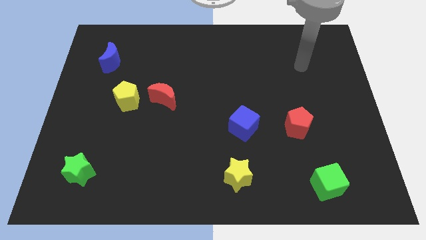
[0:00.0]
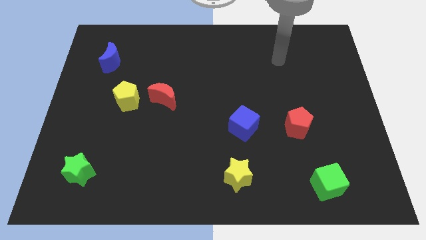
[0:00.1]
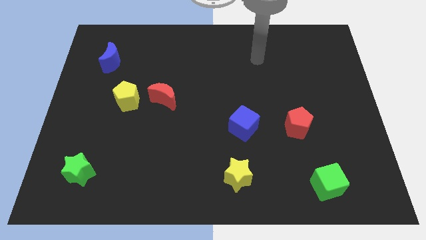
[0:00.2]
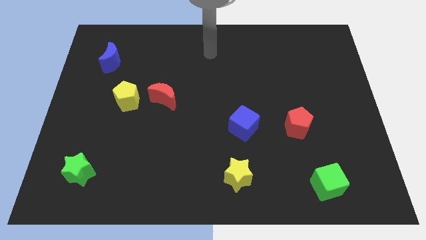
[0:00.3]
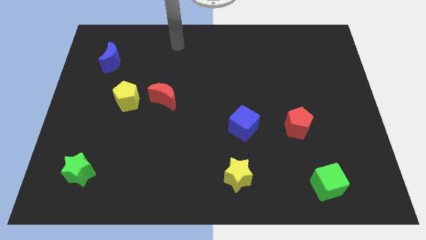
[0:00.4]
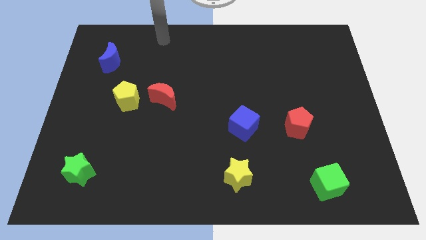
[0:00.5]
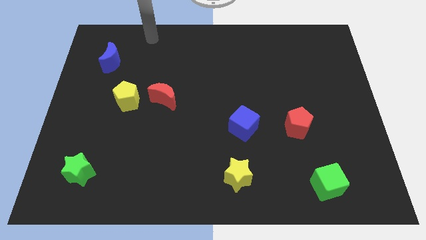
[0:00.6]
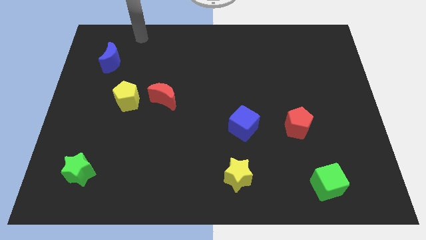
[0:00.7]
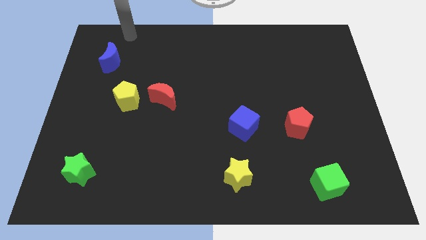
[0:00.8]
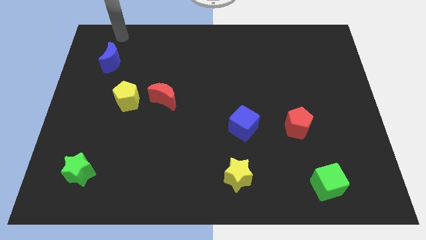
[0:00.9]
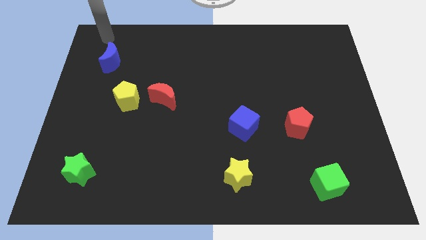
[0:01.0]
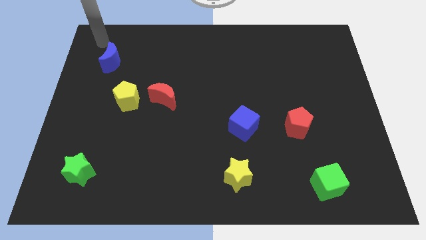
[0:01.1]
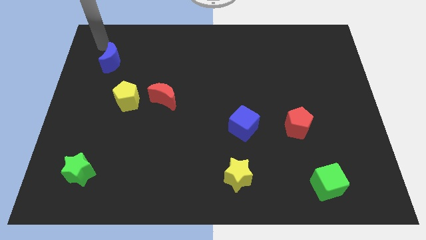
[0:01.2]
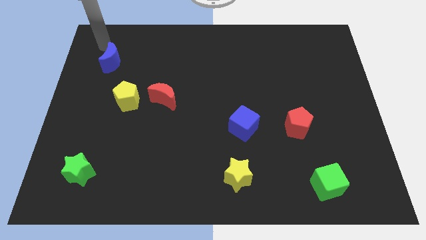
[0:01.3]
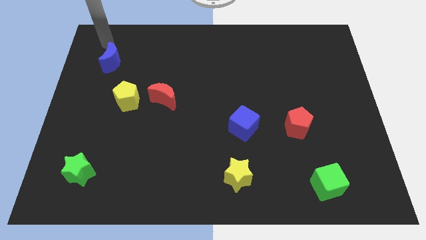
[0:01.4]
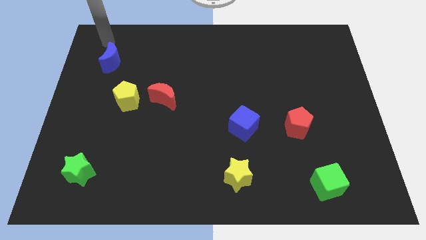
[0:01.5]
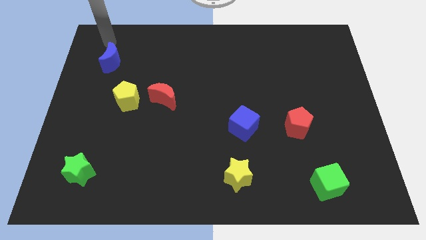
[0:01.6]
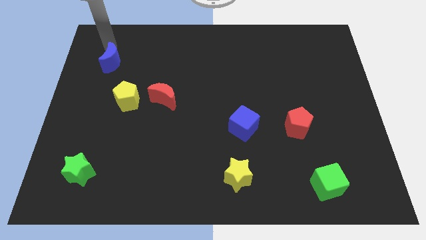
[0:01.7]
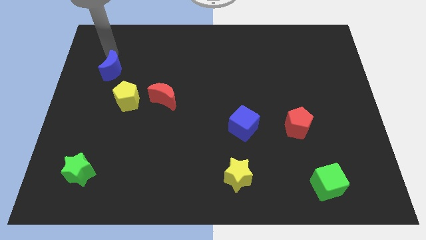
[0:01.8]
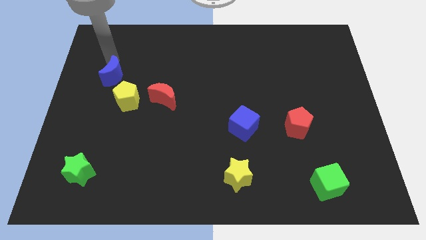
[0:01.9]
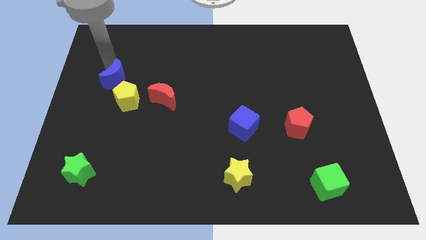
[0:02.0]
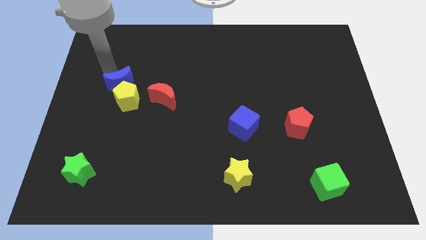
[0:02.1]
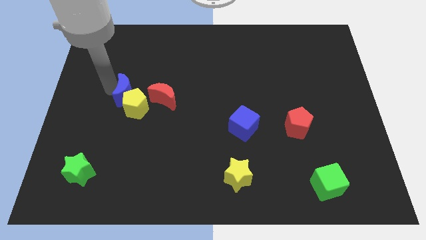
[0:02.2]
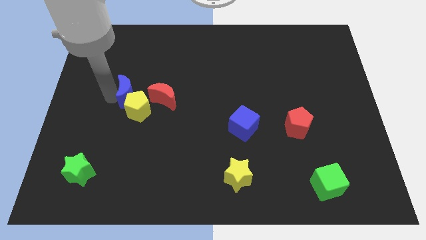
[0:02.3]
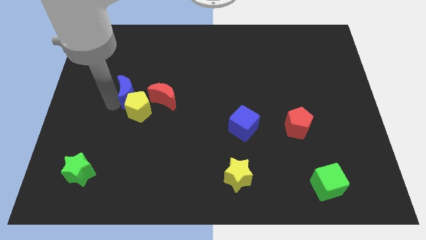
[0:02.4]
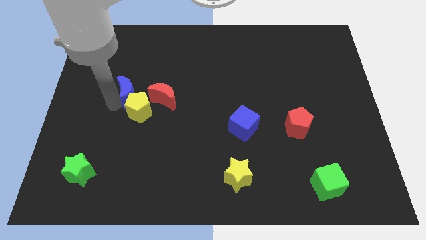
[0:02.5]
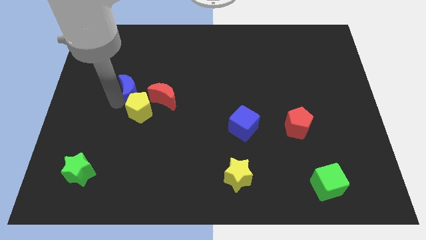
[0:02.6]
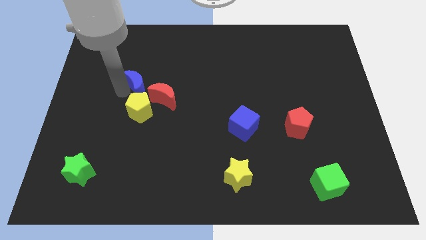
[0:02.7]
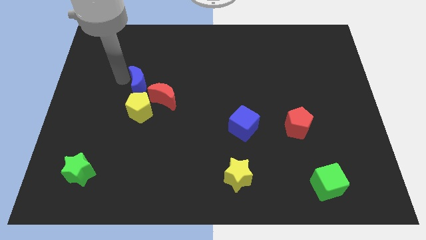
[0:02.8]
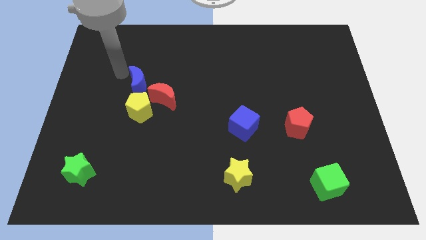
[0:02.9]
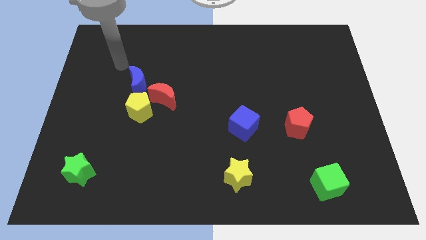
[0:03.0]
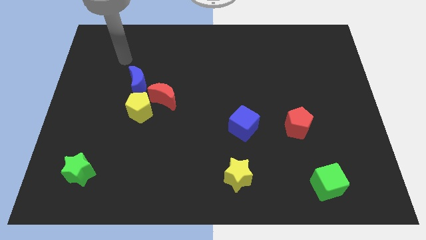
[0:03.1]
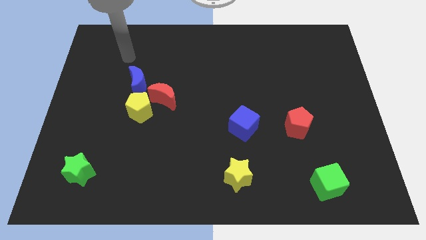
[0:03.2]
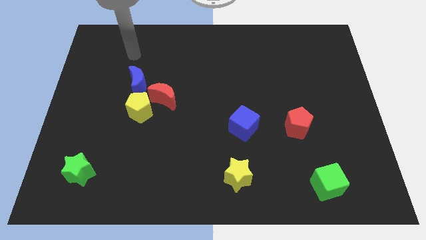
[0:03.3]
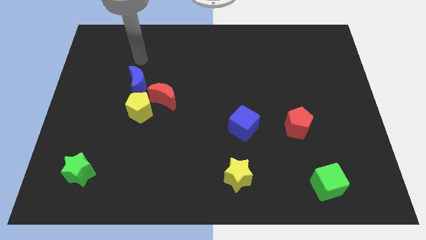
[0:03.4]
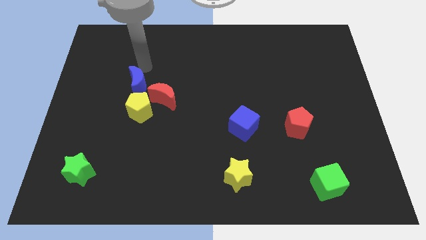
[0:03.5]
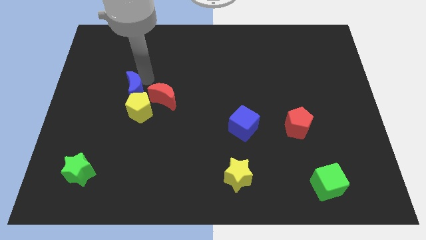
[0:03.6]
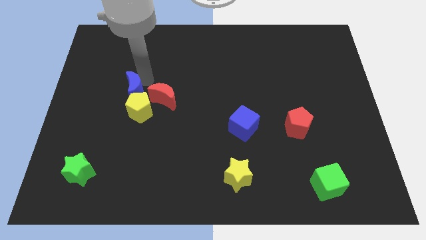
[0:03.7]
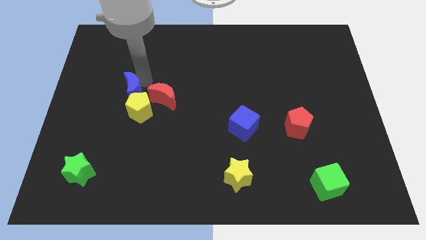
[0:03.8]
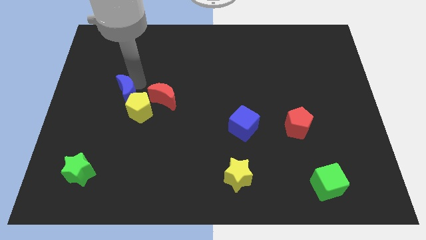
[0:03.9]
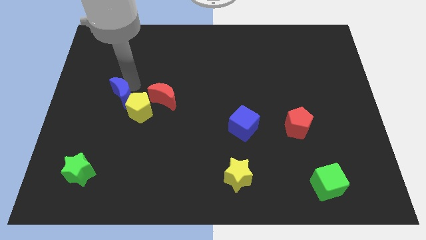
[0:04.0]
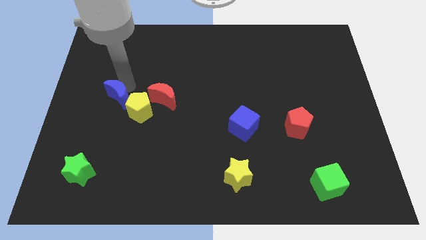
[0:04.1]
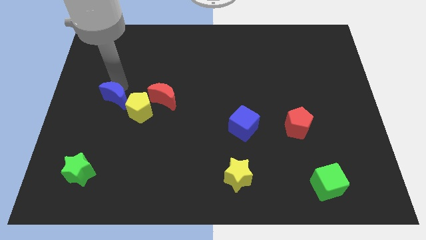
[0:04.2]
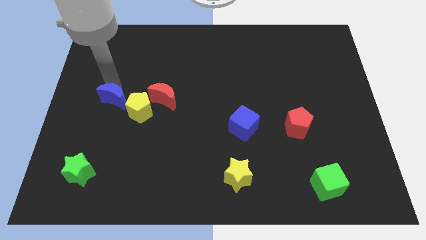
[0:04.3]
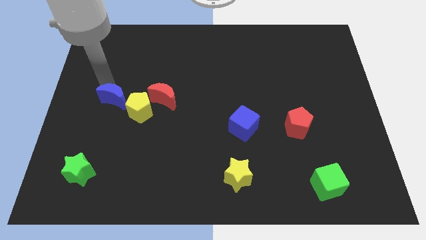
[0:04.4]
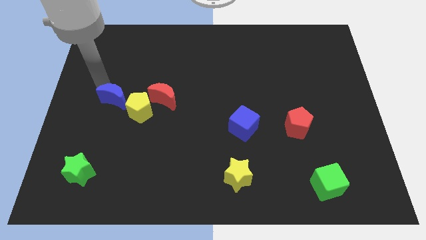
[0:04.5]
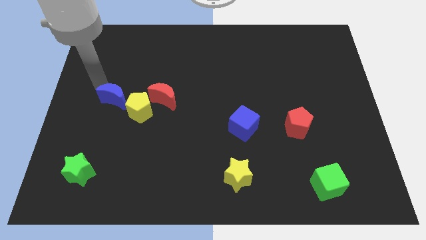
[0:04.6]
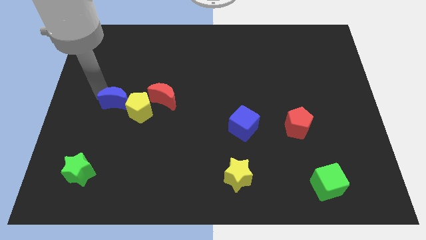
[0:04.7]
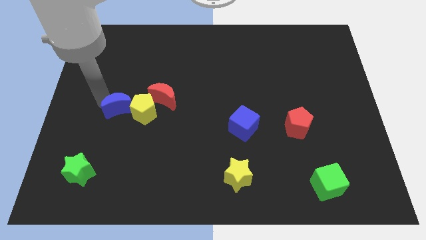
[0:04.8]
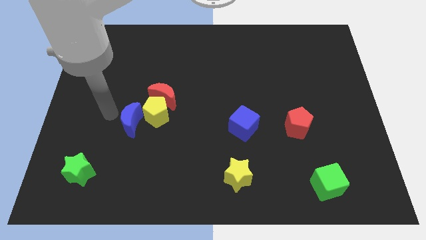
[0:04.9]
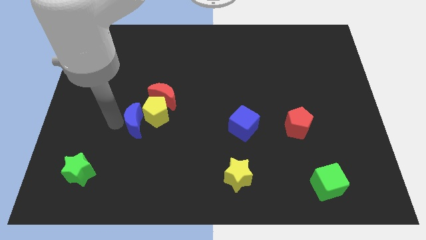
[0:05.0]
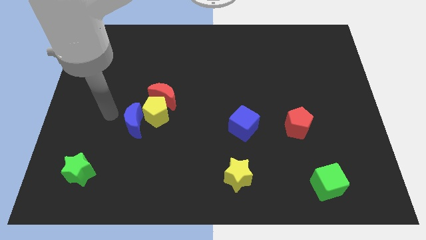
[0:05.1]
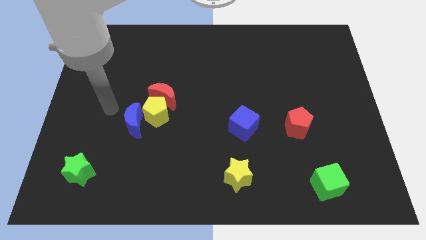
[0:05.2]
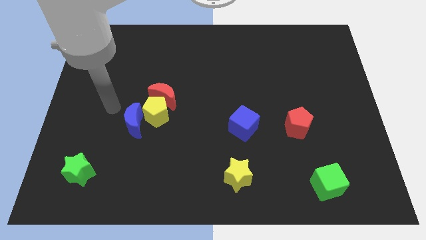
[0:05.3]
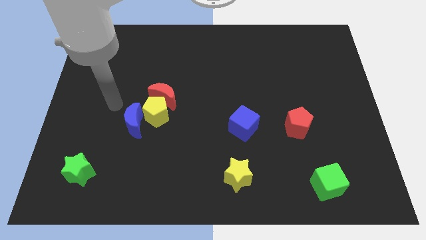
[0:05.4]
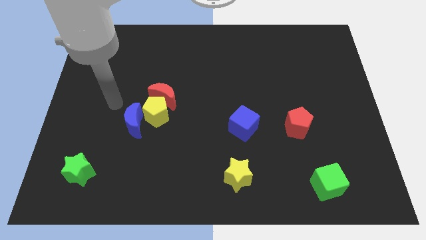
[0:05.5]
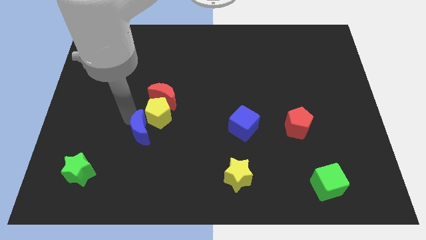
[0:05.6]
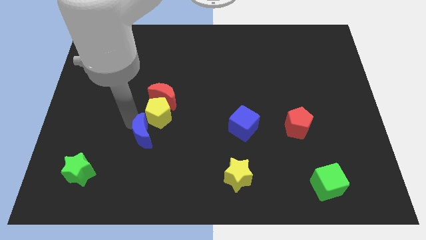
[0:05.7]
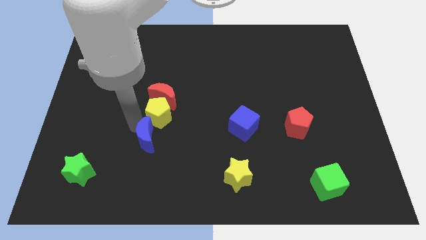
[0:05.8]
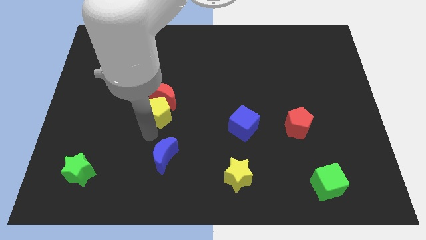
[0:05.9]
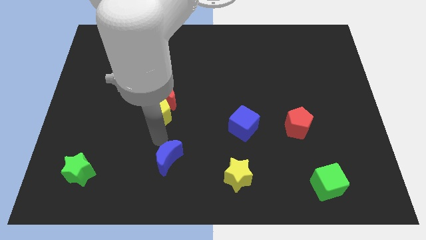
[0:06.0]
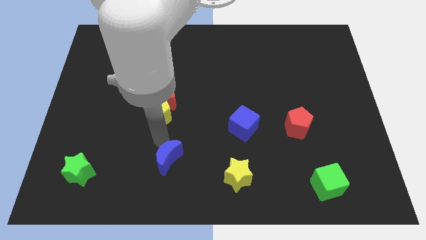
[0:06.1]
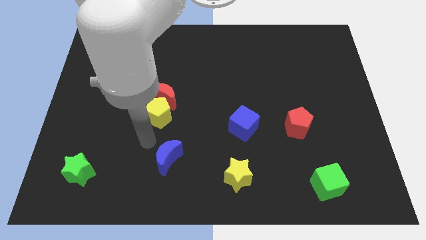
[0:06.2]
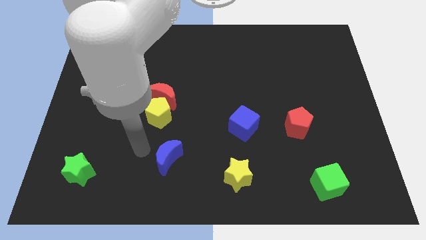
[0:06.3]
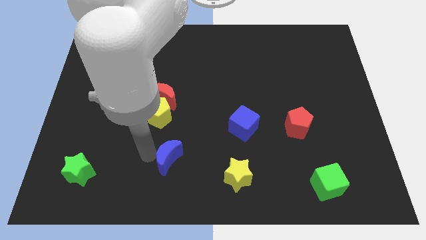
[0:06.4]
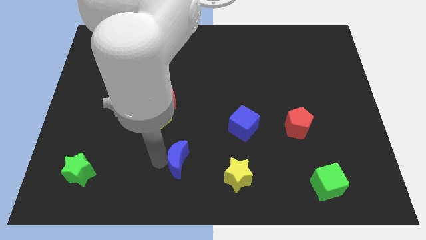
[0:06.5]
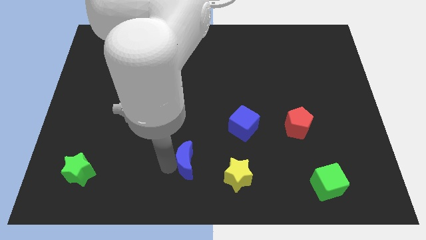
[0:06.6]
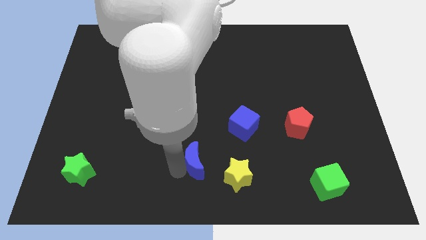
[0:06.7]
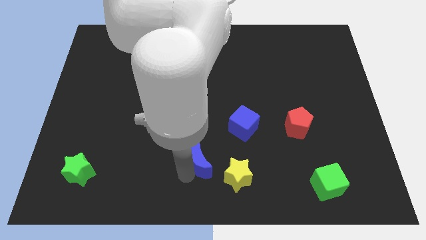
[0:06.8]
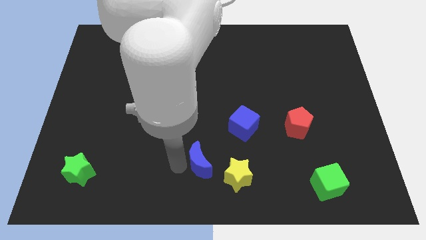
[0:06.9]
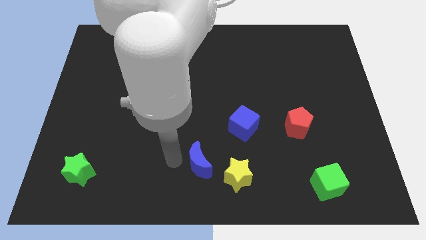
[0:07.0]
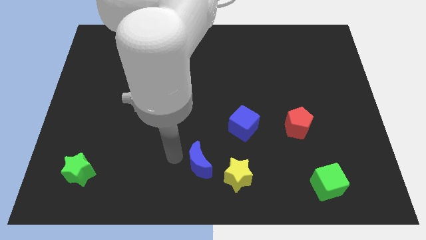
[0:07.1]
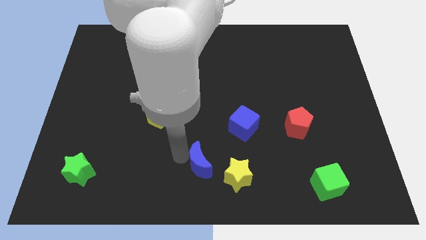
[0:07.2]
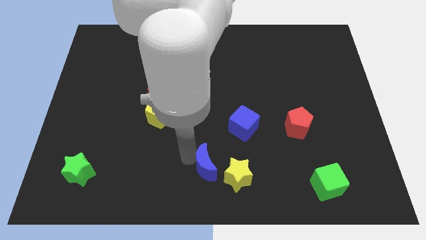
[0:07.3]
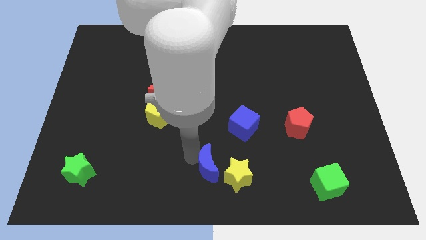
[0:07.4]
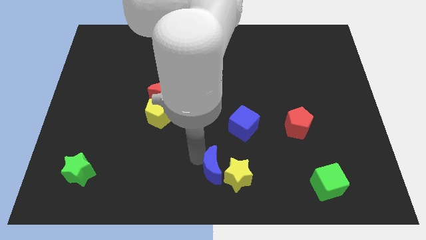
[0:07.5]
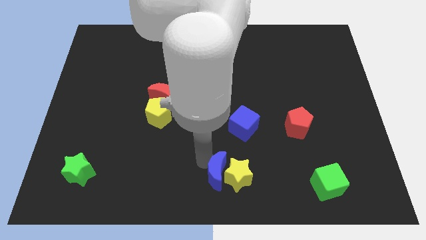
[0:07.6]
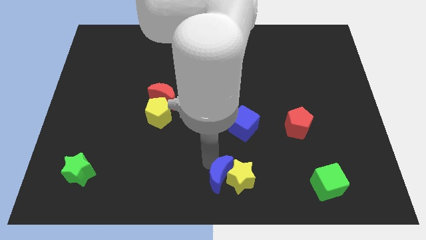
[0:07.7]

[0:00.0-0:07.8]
slide the blue moon towards the yellow star

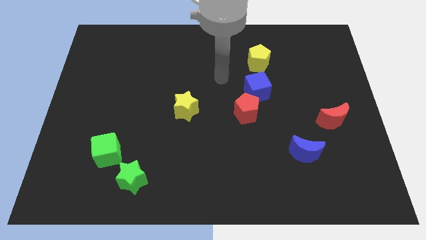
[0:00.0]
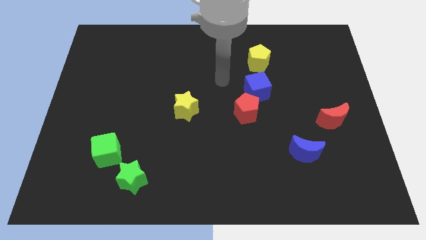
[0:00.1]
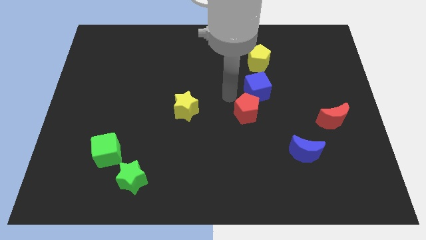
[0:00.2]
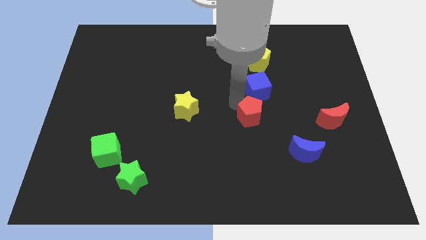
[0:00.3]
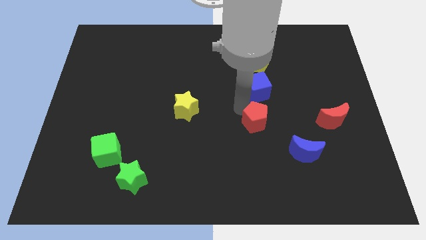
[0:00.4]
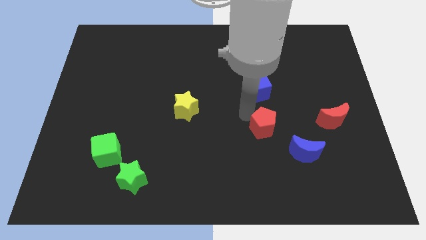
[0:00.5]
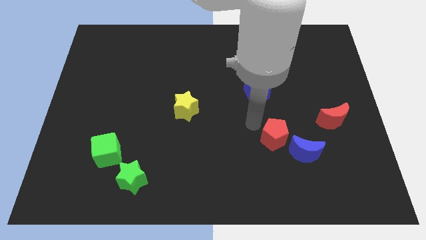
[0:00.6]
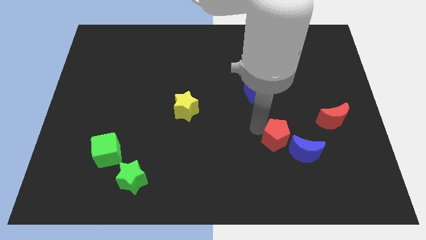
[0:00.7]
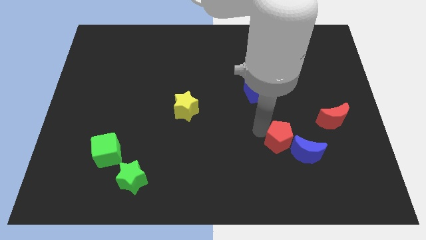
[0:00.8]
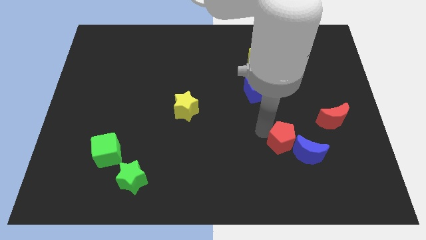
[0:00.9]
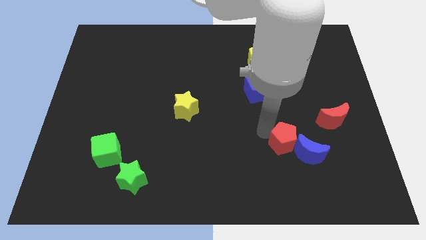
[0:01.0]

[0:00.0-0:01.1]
move the red pentagon towards the blue moon
